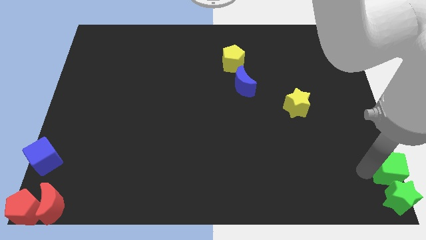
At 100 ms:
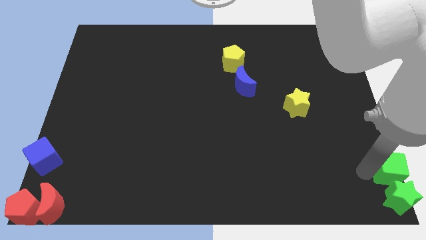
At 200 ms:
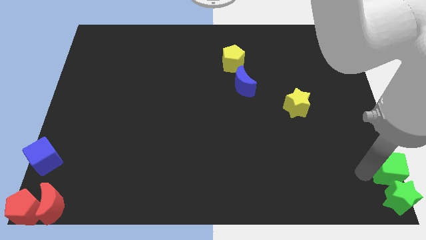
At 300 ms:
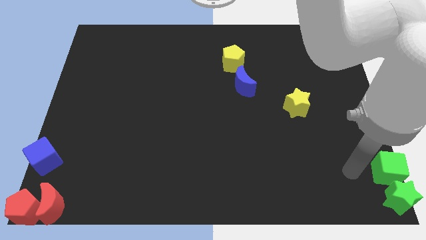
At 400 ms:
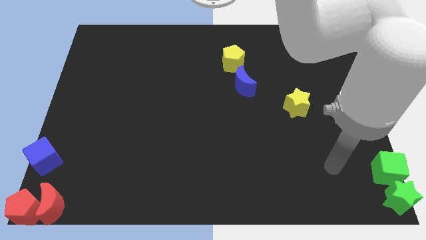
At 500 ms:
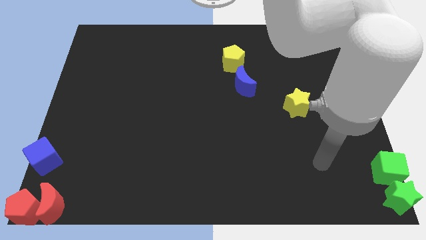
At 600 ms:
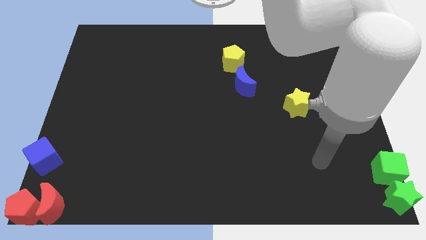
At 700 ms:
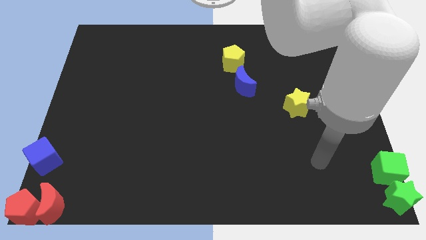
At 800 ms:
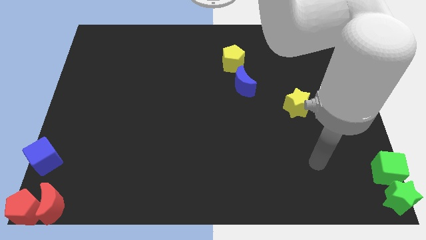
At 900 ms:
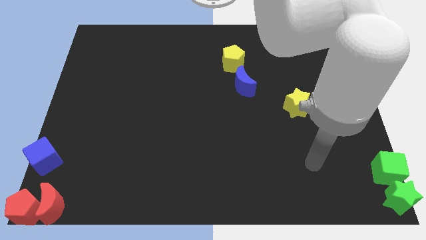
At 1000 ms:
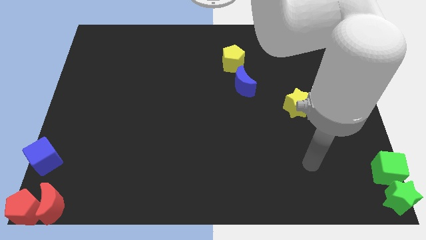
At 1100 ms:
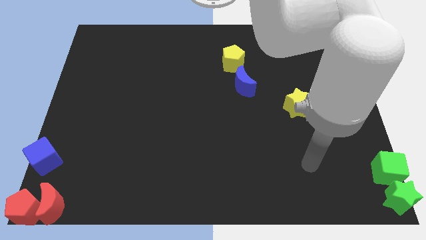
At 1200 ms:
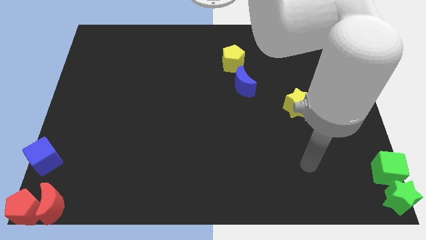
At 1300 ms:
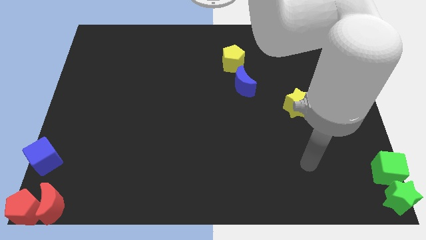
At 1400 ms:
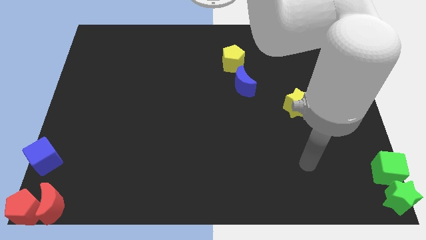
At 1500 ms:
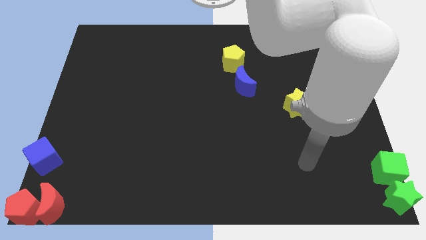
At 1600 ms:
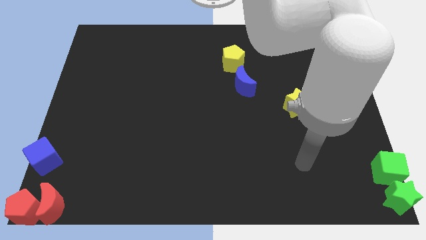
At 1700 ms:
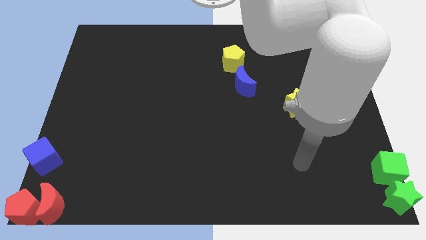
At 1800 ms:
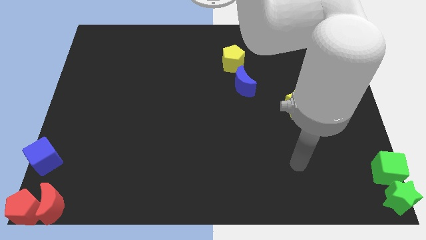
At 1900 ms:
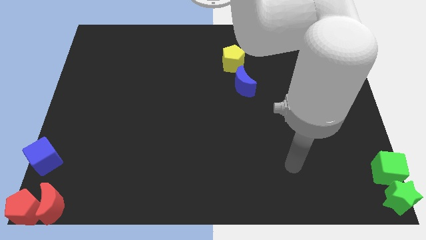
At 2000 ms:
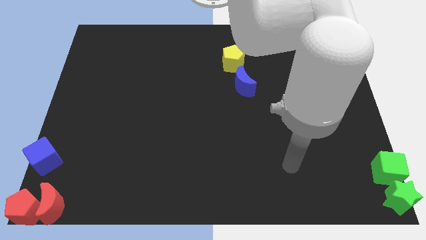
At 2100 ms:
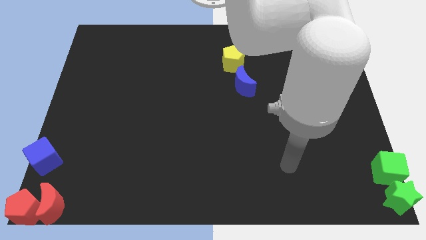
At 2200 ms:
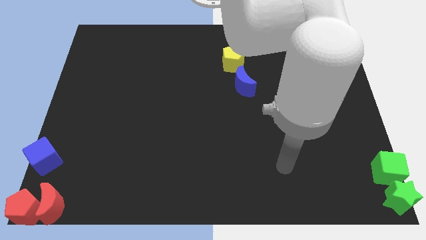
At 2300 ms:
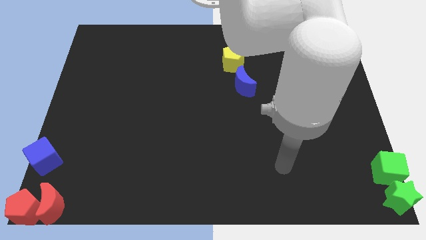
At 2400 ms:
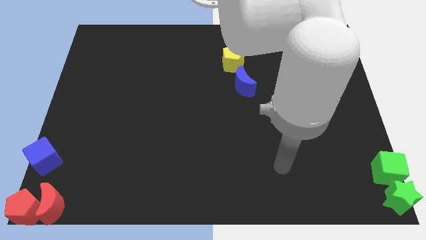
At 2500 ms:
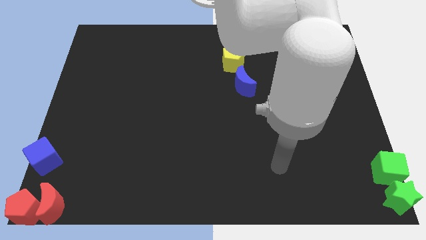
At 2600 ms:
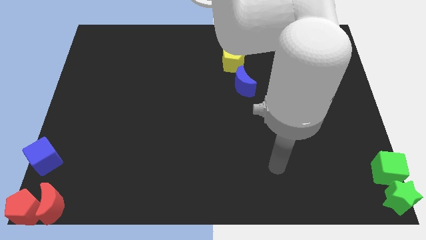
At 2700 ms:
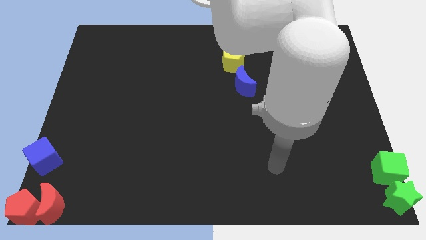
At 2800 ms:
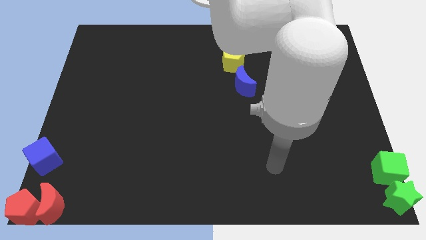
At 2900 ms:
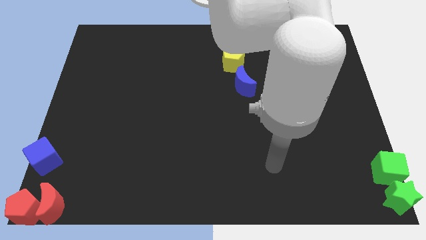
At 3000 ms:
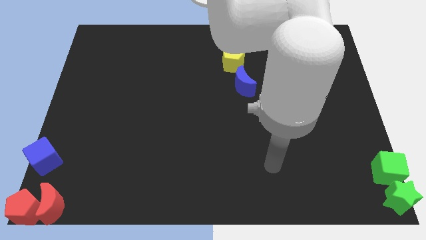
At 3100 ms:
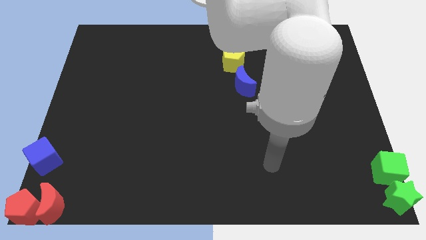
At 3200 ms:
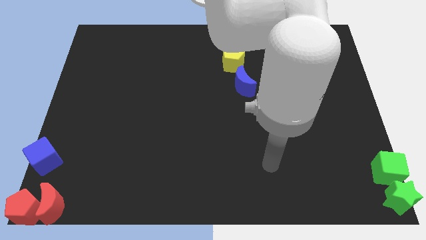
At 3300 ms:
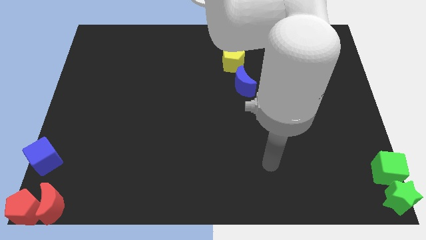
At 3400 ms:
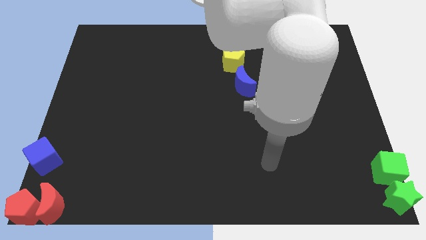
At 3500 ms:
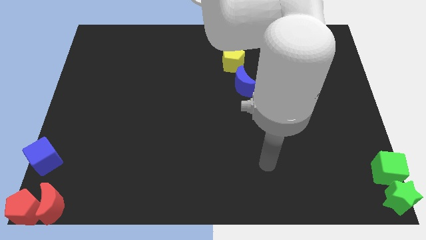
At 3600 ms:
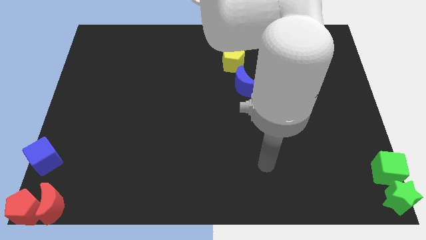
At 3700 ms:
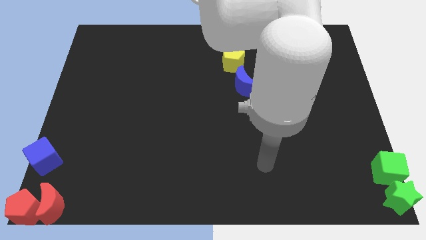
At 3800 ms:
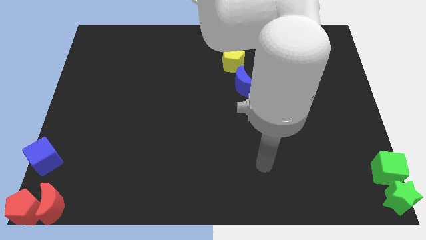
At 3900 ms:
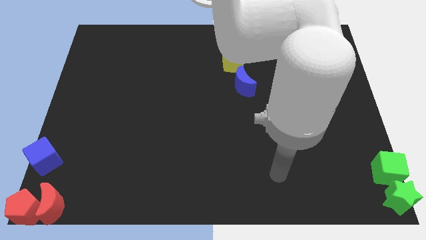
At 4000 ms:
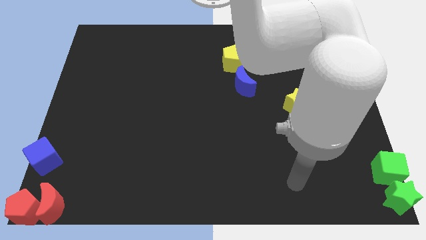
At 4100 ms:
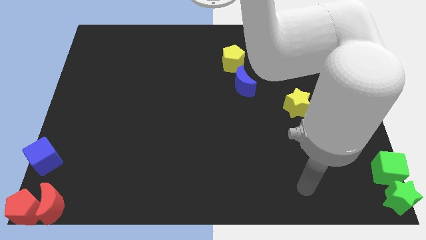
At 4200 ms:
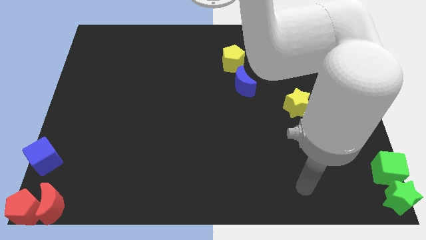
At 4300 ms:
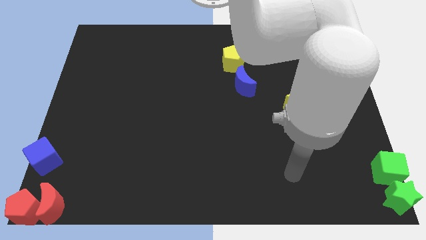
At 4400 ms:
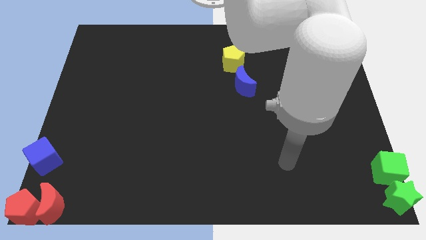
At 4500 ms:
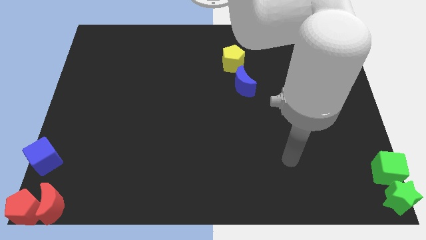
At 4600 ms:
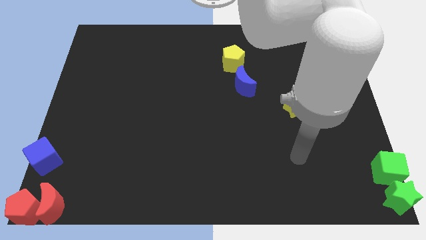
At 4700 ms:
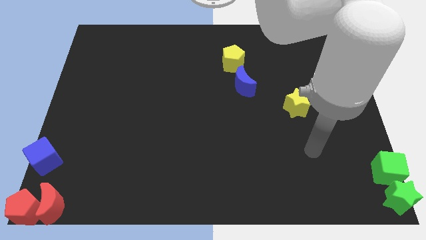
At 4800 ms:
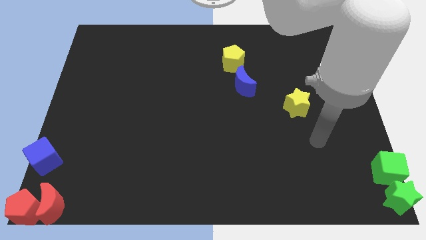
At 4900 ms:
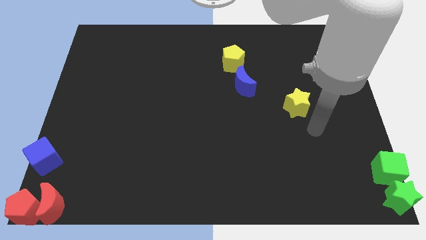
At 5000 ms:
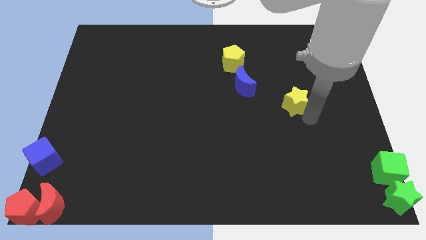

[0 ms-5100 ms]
move your arm away from the green cube

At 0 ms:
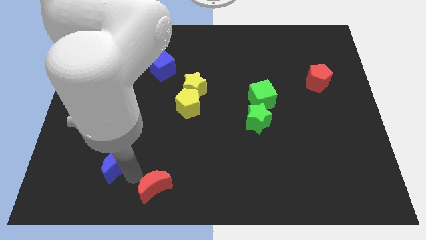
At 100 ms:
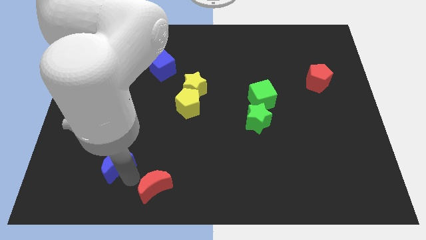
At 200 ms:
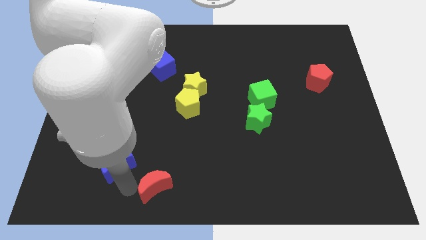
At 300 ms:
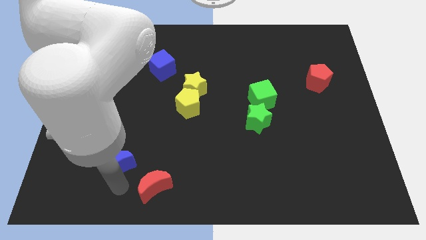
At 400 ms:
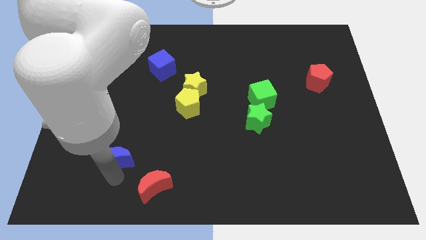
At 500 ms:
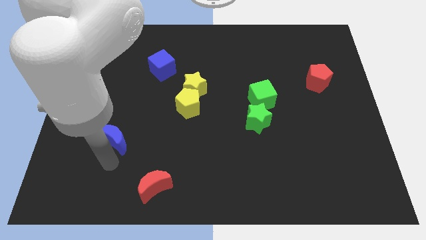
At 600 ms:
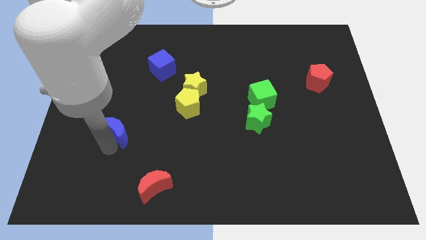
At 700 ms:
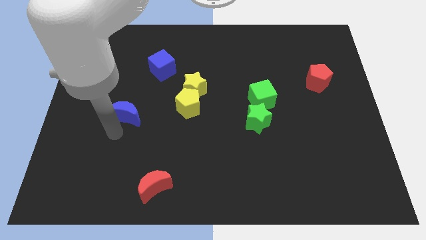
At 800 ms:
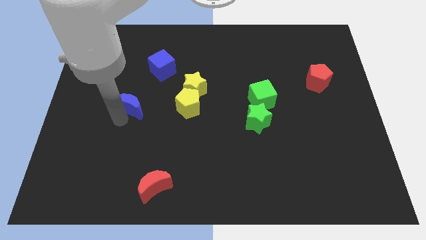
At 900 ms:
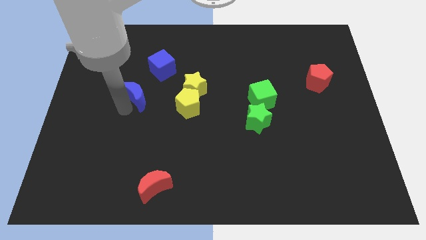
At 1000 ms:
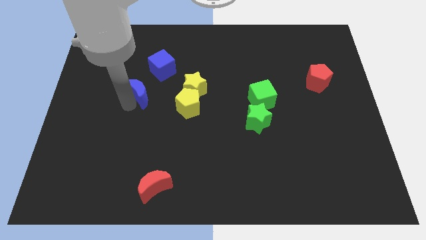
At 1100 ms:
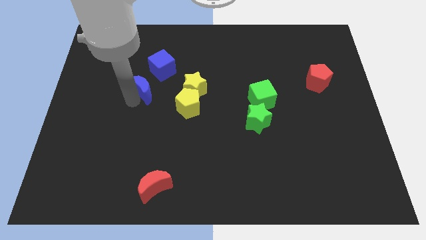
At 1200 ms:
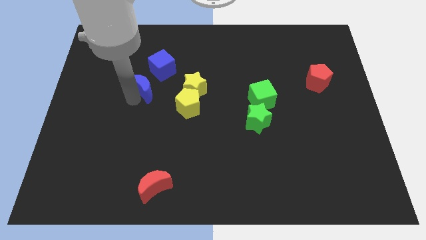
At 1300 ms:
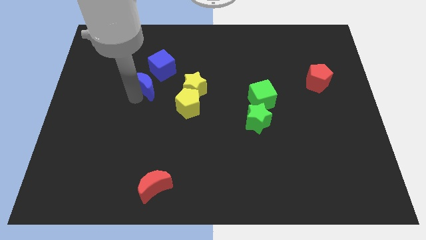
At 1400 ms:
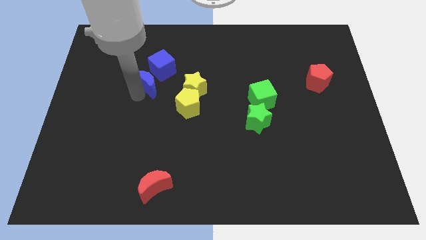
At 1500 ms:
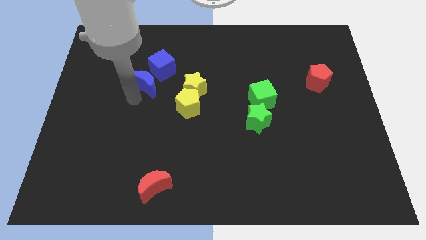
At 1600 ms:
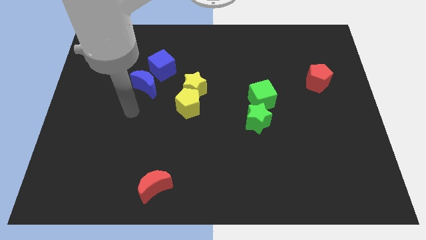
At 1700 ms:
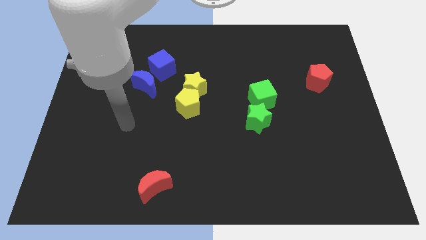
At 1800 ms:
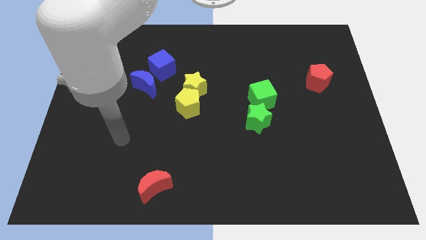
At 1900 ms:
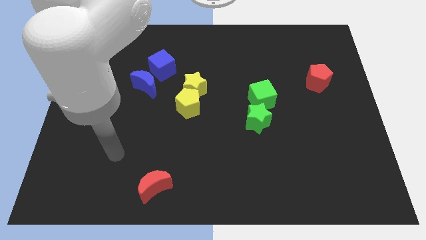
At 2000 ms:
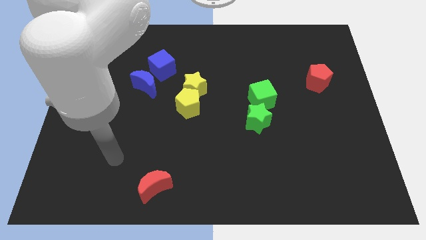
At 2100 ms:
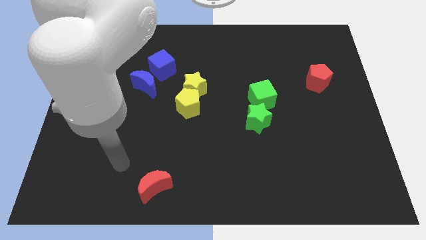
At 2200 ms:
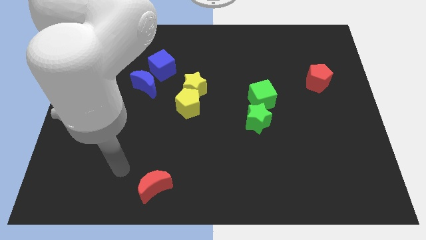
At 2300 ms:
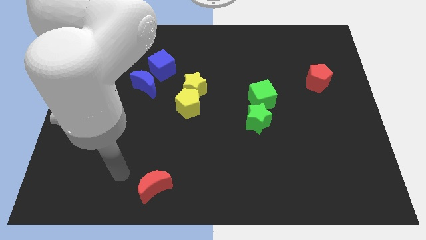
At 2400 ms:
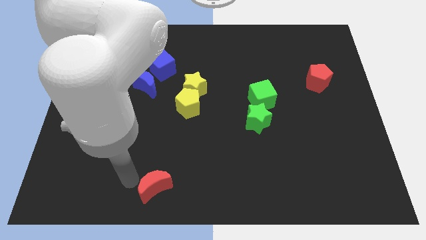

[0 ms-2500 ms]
slide the blue crescent towards the blue cube

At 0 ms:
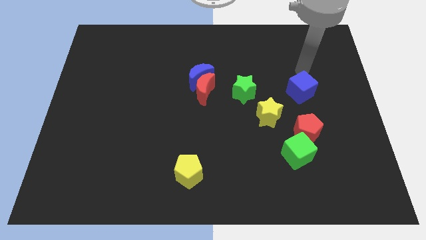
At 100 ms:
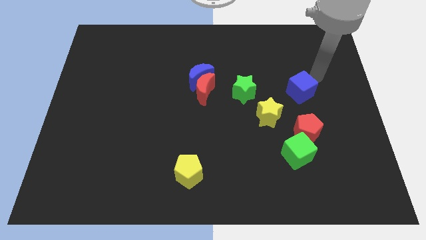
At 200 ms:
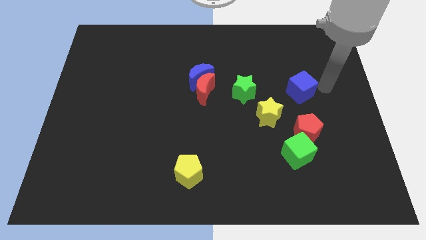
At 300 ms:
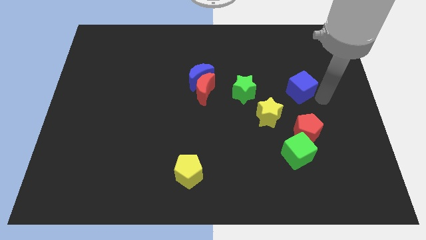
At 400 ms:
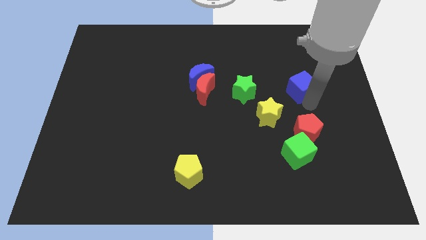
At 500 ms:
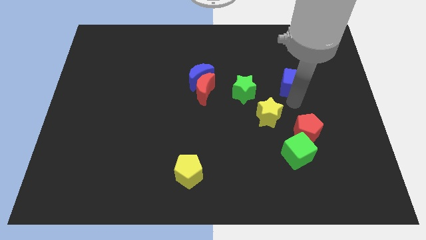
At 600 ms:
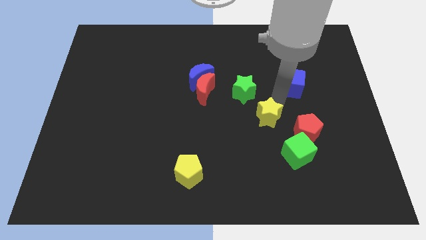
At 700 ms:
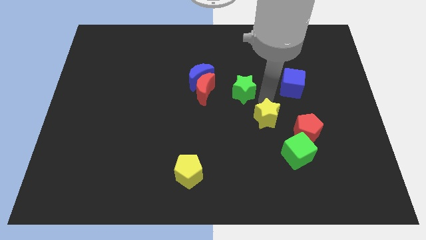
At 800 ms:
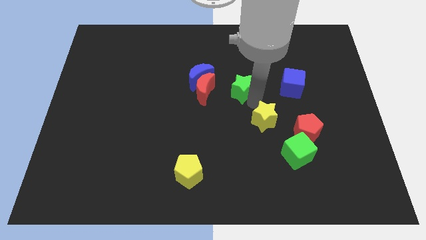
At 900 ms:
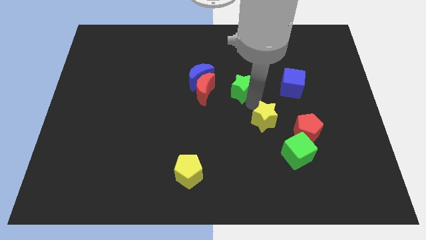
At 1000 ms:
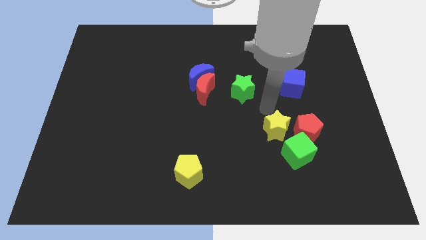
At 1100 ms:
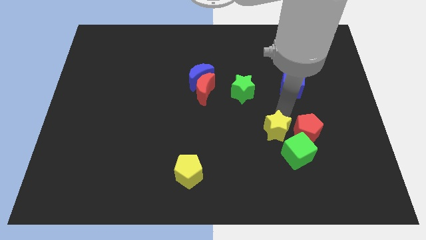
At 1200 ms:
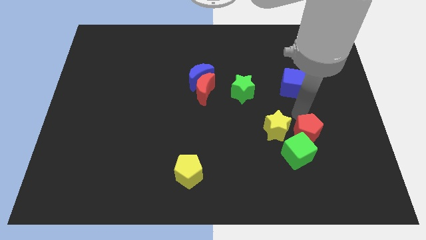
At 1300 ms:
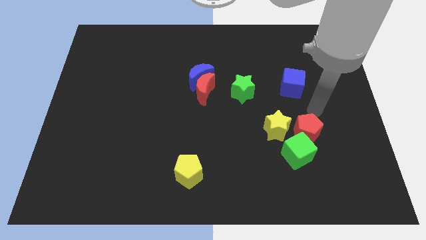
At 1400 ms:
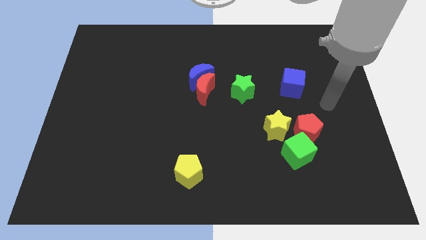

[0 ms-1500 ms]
place yellow star beside red pentagon
